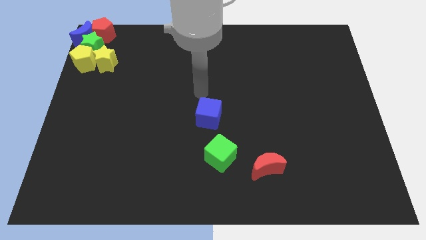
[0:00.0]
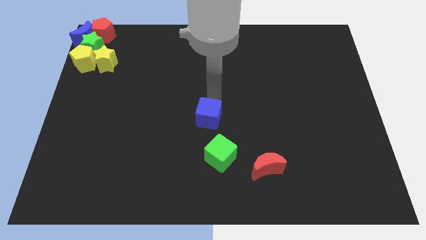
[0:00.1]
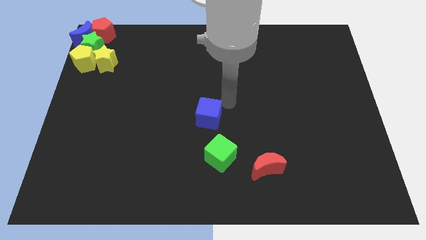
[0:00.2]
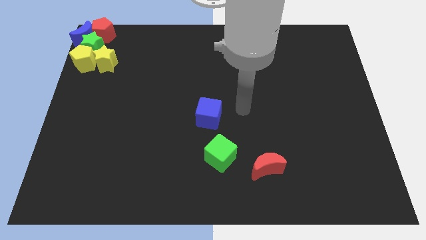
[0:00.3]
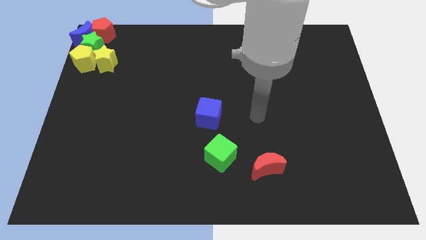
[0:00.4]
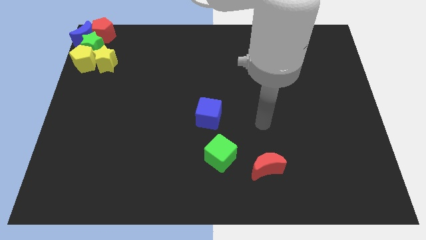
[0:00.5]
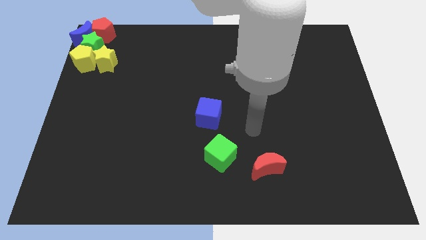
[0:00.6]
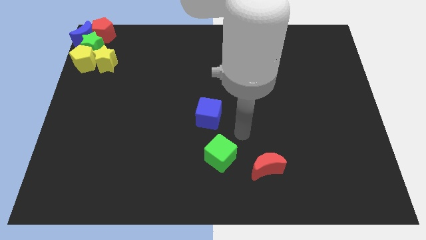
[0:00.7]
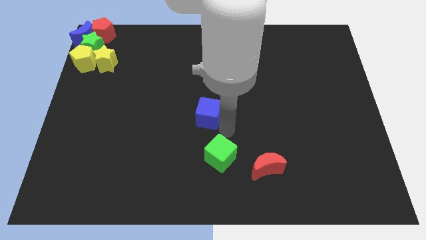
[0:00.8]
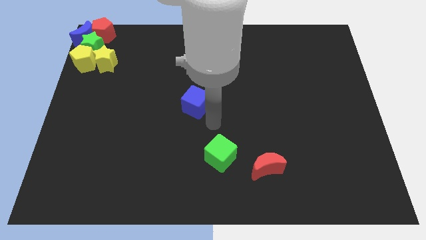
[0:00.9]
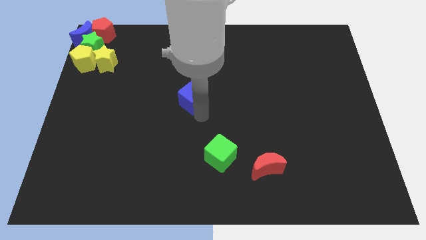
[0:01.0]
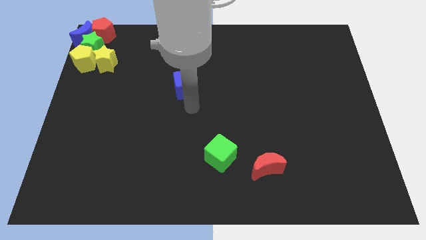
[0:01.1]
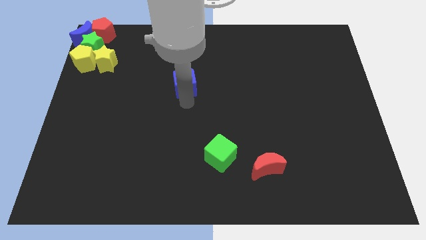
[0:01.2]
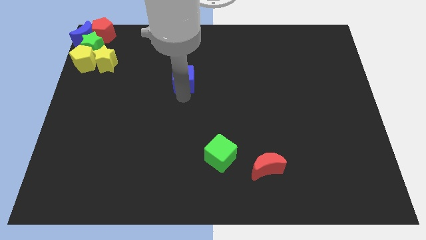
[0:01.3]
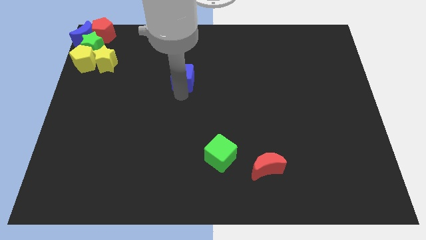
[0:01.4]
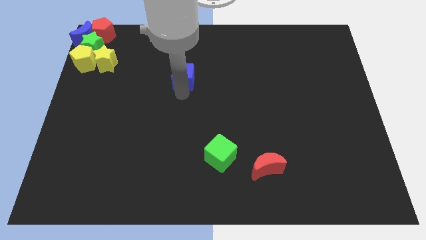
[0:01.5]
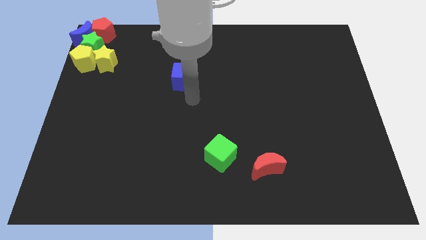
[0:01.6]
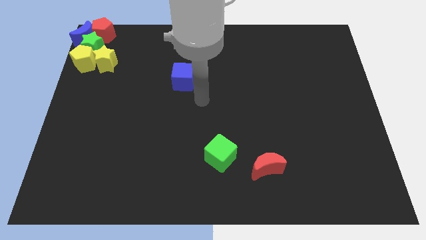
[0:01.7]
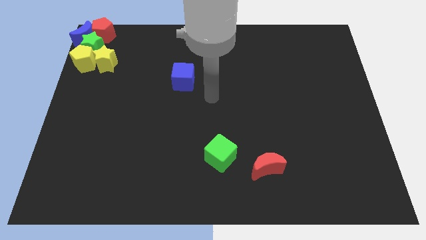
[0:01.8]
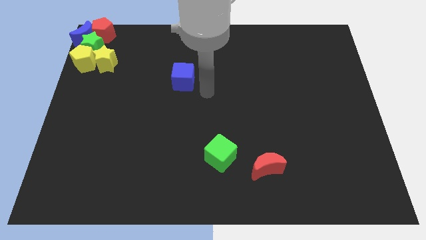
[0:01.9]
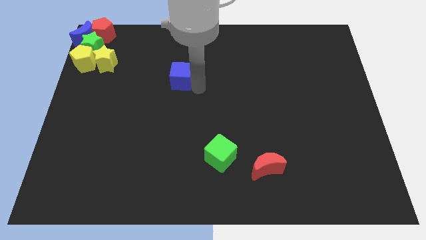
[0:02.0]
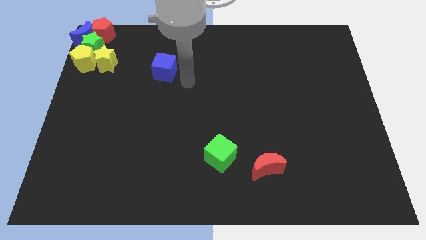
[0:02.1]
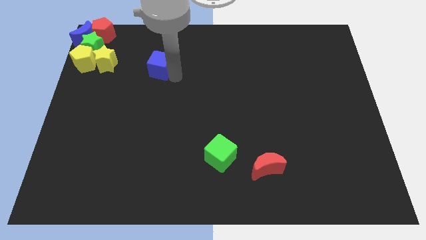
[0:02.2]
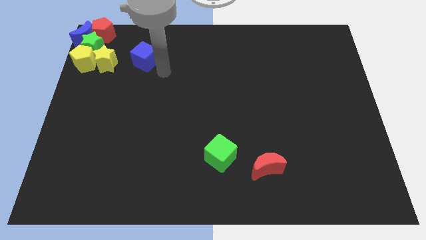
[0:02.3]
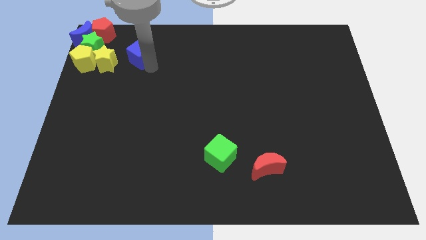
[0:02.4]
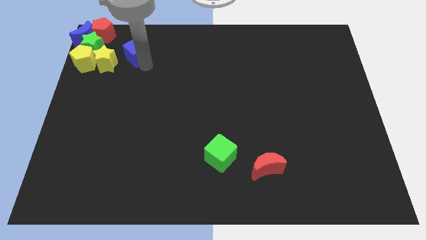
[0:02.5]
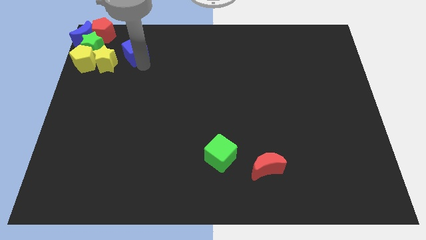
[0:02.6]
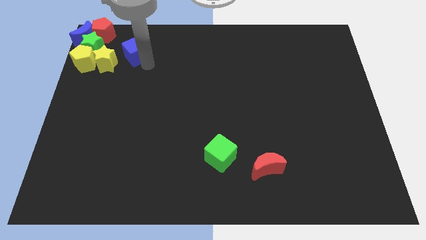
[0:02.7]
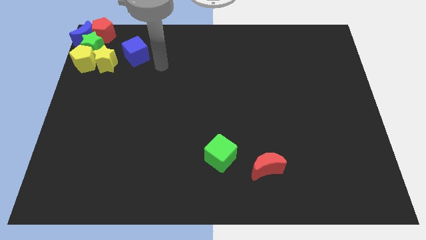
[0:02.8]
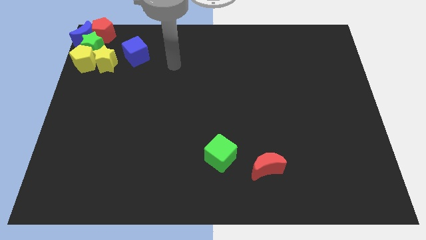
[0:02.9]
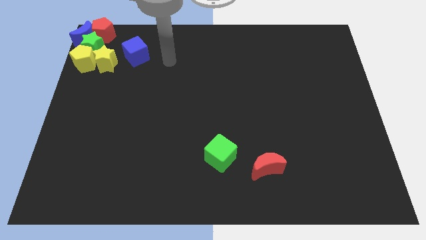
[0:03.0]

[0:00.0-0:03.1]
move the blue cube to the right side of the yellow star

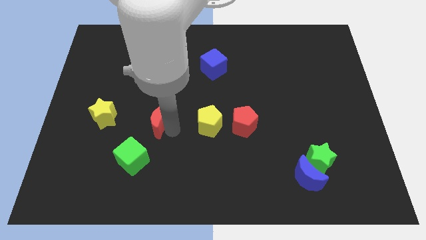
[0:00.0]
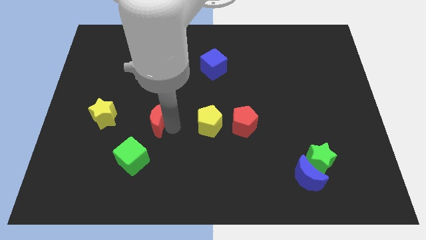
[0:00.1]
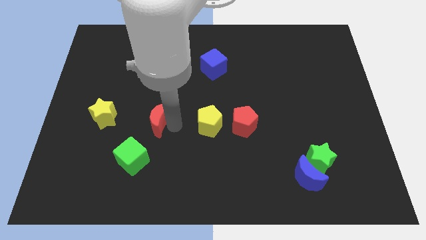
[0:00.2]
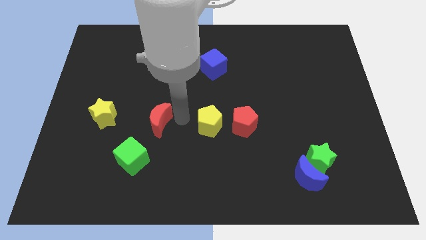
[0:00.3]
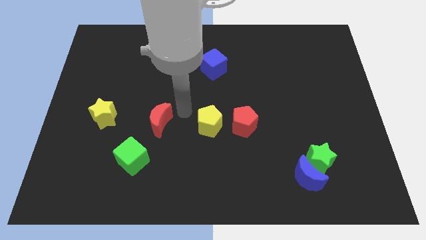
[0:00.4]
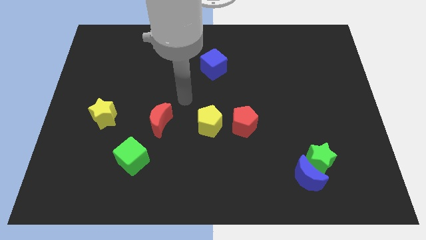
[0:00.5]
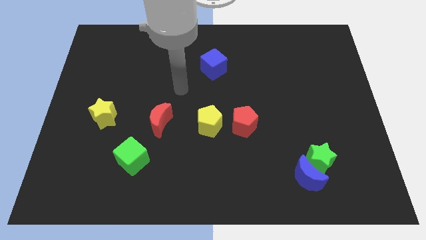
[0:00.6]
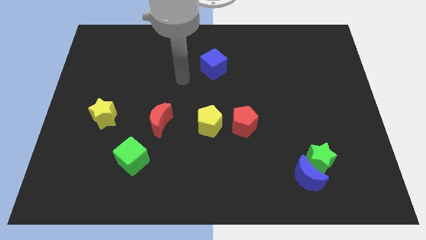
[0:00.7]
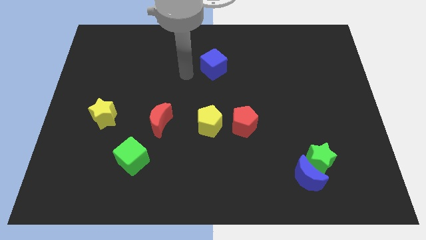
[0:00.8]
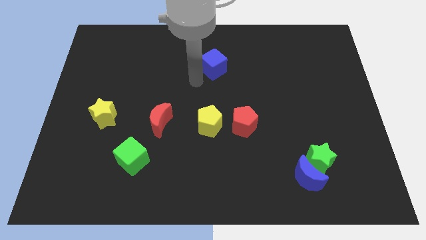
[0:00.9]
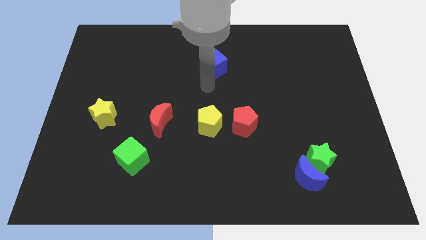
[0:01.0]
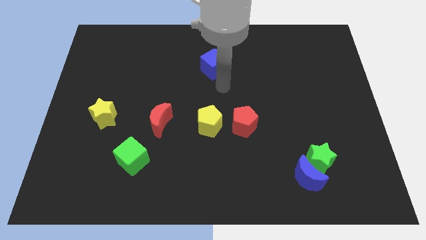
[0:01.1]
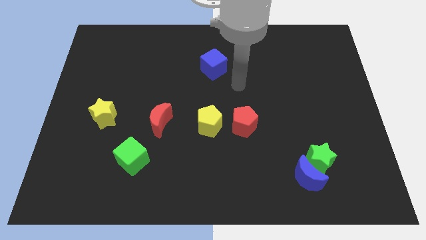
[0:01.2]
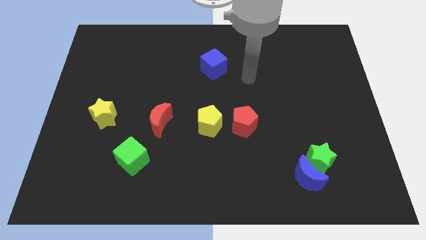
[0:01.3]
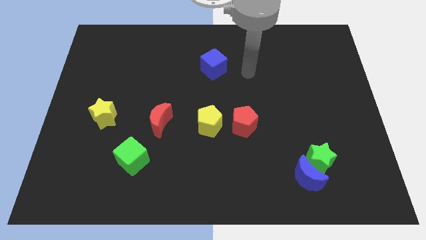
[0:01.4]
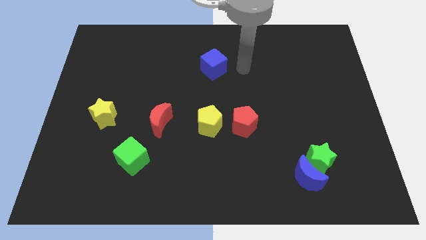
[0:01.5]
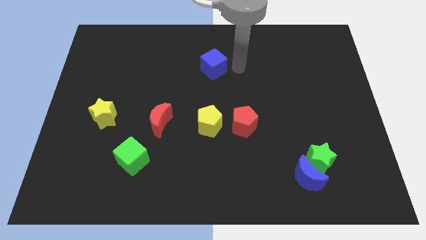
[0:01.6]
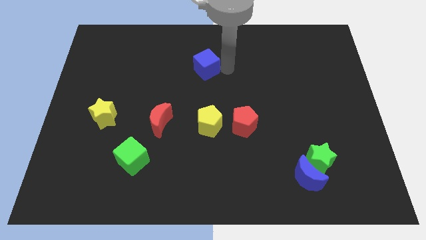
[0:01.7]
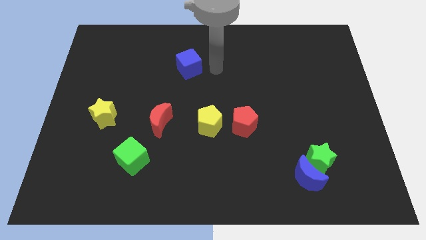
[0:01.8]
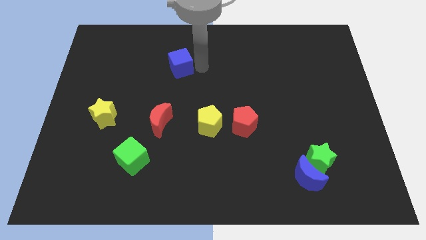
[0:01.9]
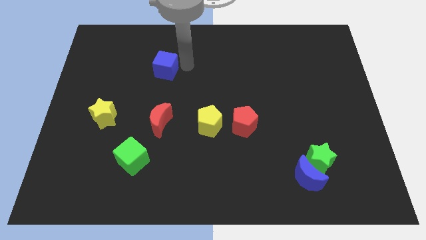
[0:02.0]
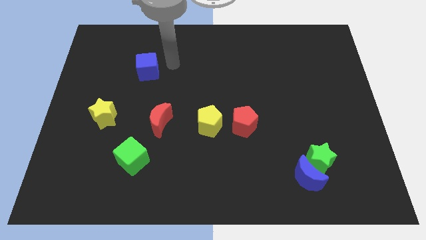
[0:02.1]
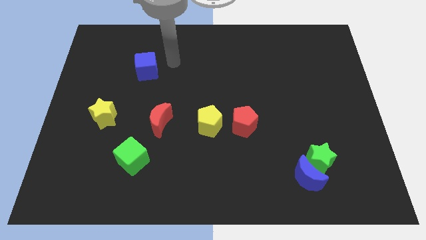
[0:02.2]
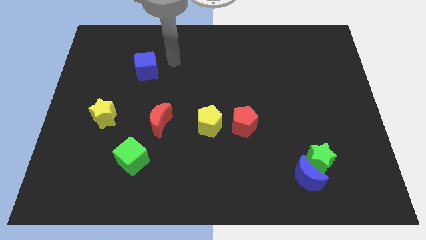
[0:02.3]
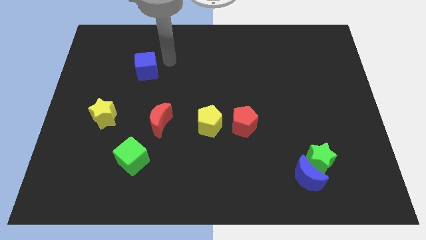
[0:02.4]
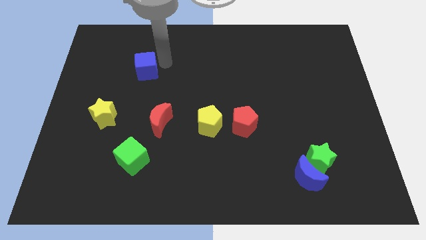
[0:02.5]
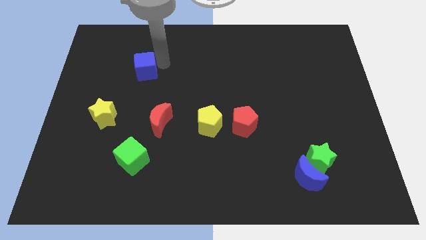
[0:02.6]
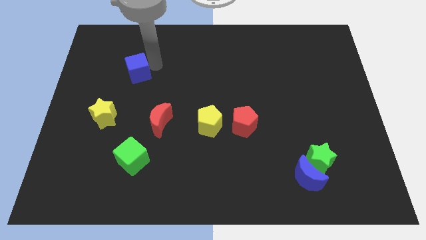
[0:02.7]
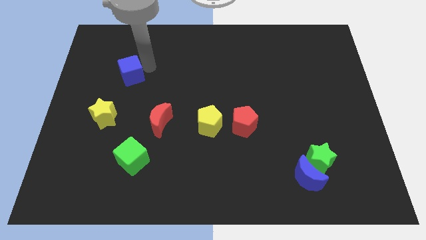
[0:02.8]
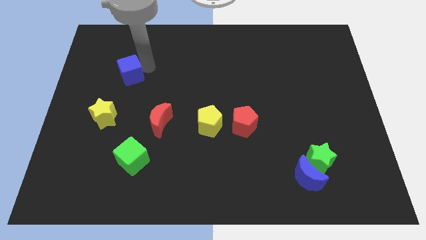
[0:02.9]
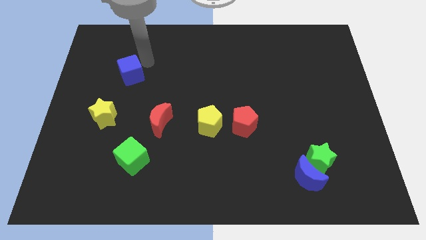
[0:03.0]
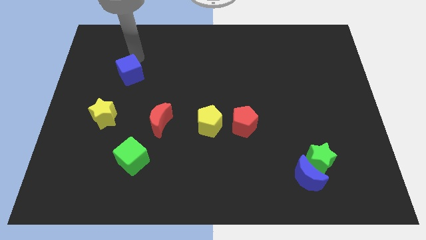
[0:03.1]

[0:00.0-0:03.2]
place blue cube vertically above green cube

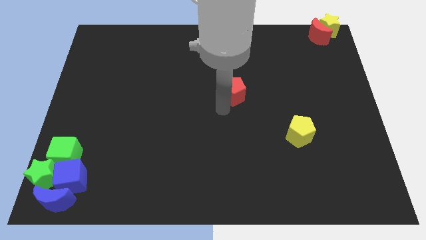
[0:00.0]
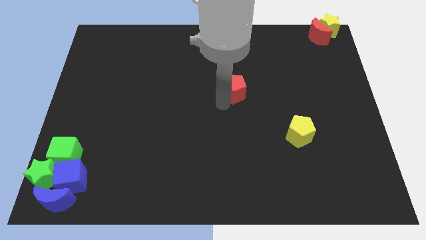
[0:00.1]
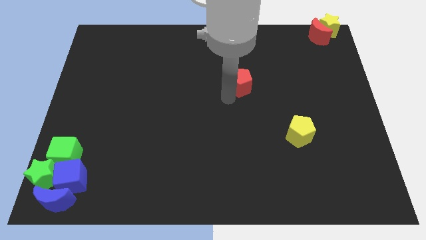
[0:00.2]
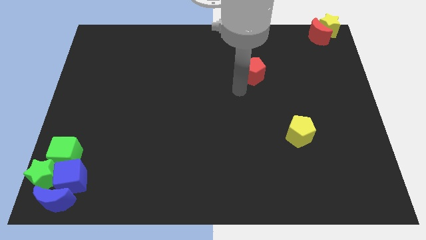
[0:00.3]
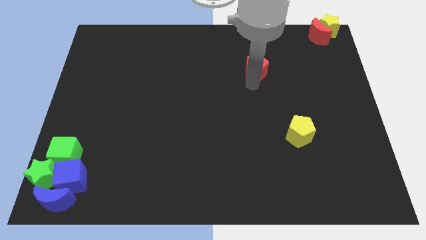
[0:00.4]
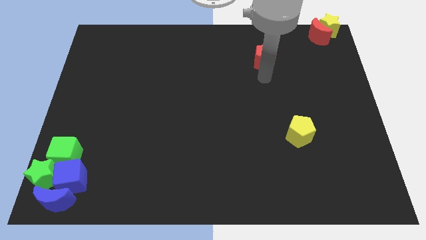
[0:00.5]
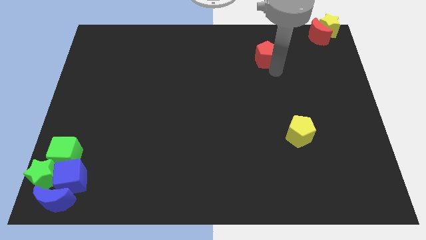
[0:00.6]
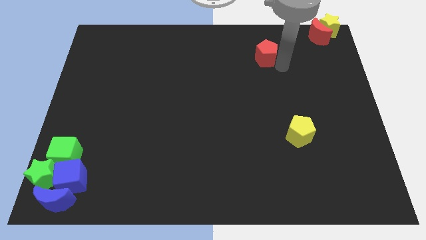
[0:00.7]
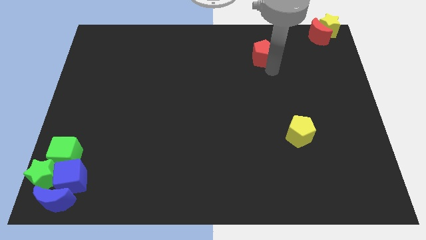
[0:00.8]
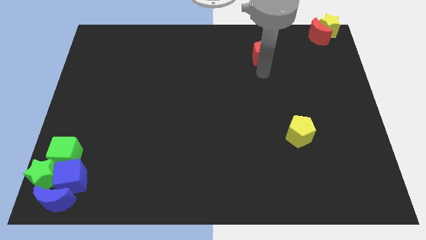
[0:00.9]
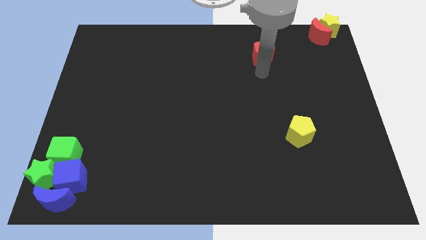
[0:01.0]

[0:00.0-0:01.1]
push red pentagon slightly upward

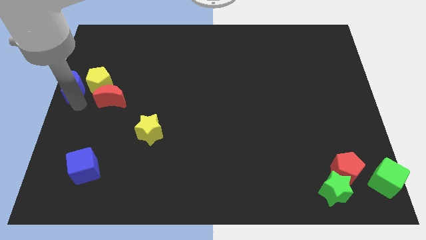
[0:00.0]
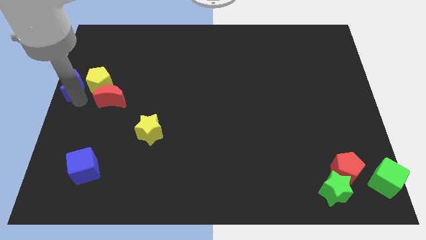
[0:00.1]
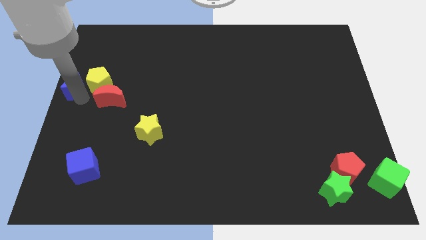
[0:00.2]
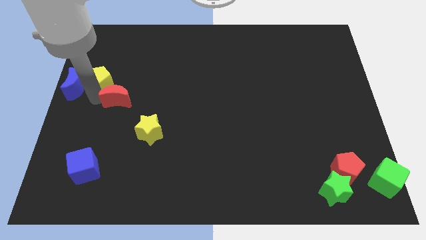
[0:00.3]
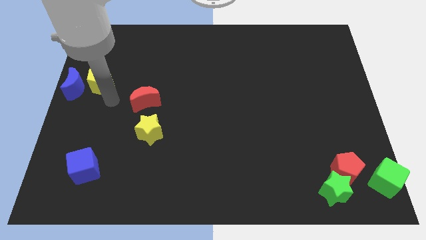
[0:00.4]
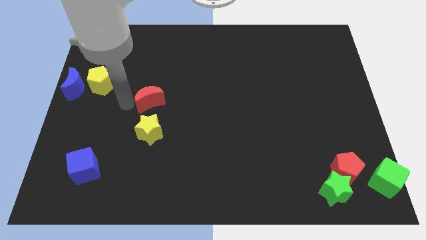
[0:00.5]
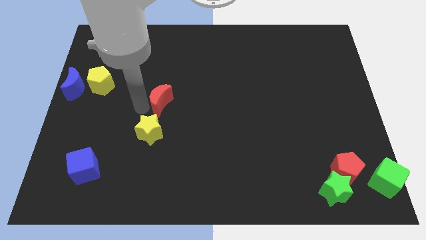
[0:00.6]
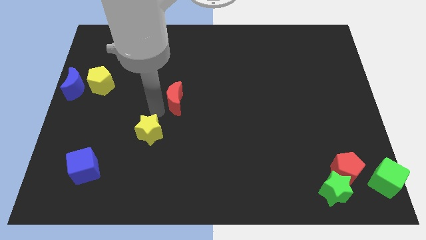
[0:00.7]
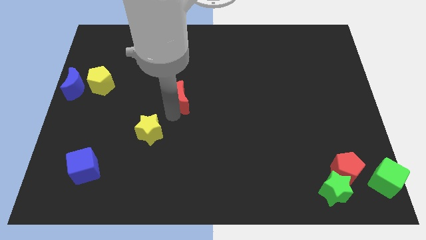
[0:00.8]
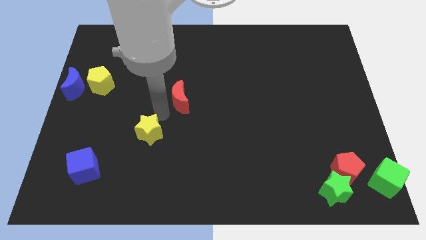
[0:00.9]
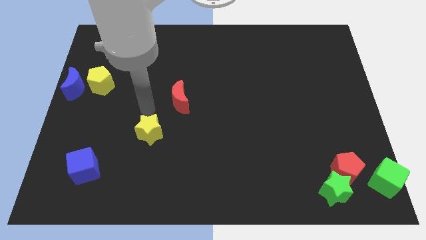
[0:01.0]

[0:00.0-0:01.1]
push the red crescent slightly to the right

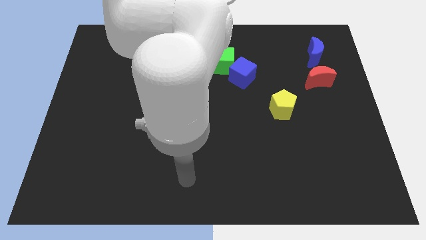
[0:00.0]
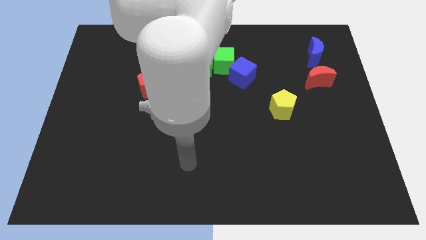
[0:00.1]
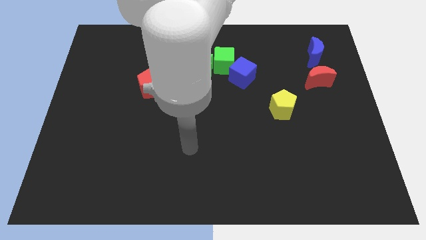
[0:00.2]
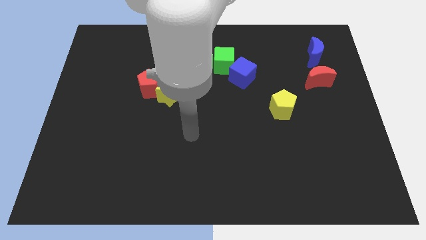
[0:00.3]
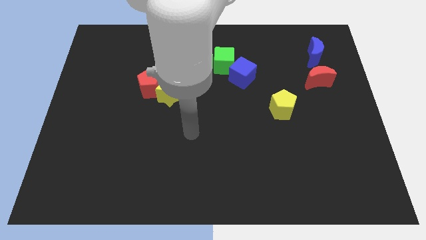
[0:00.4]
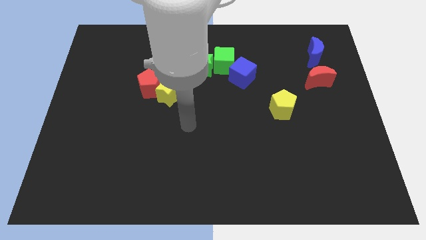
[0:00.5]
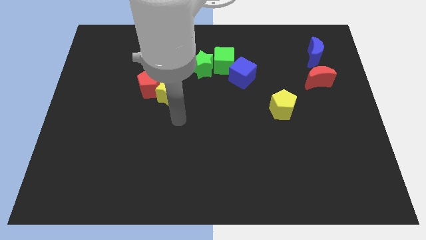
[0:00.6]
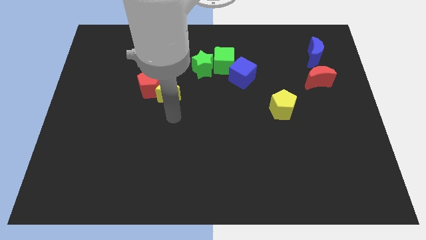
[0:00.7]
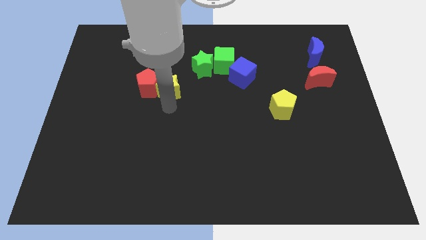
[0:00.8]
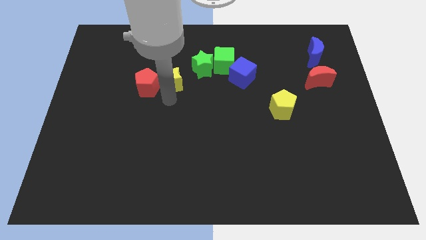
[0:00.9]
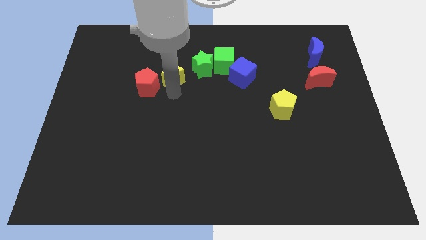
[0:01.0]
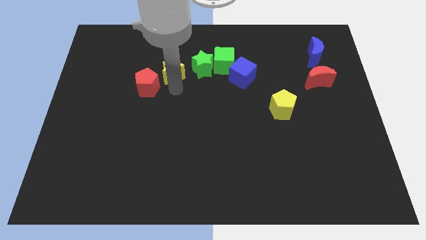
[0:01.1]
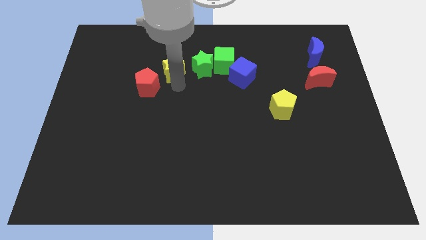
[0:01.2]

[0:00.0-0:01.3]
place the arm down to the yellow star
